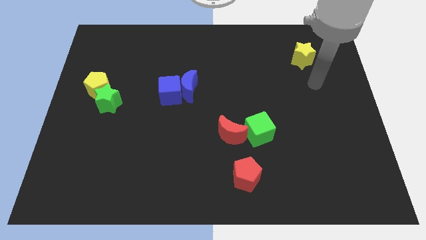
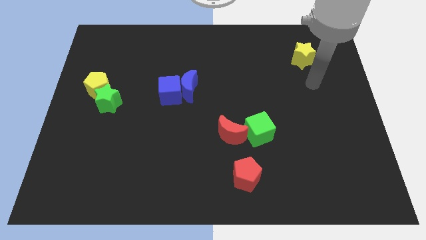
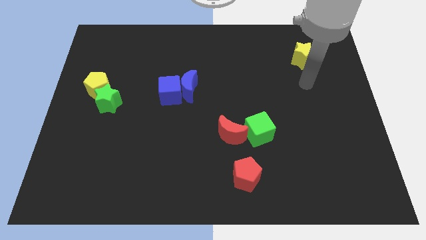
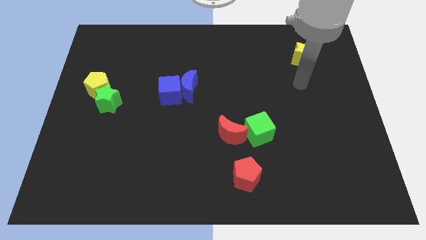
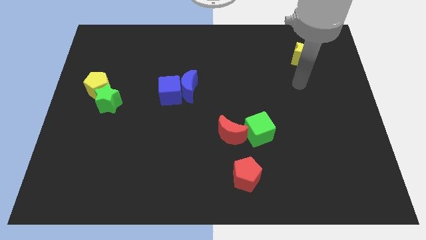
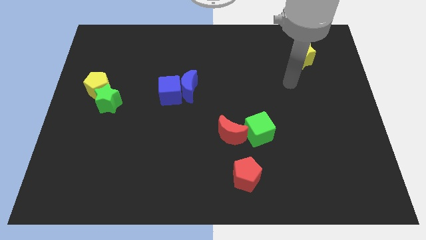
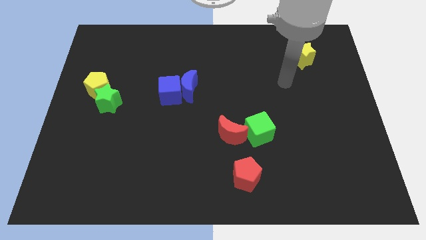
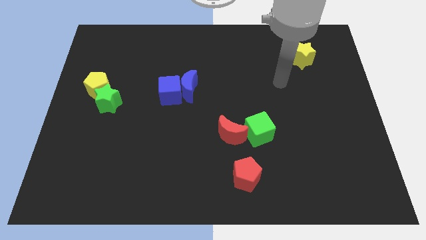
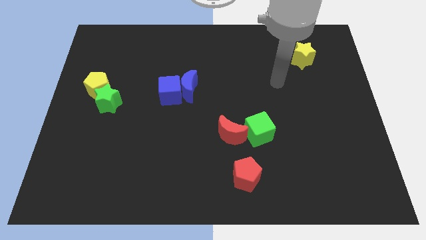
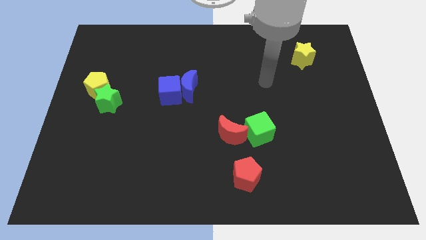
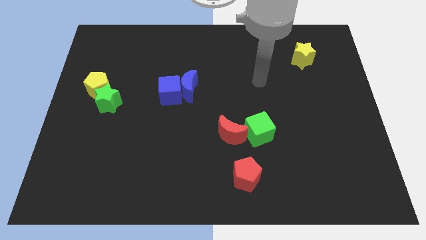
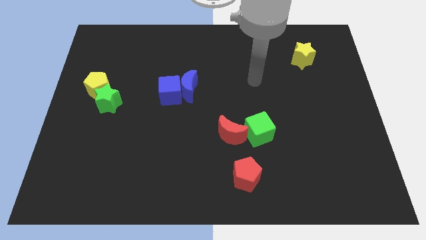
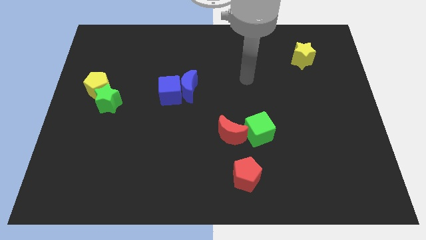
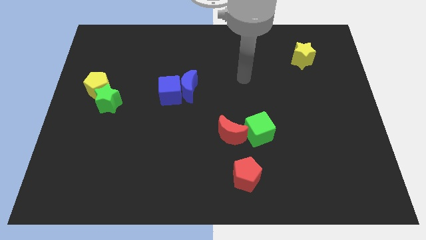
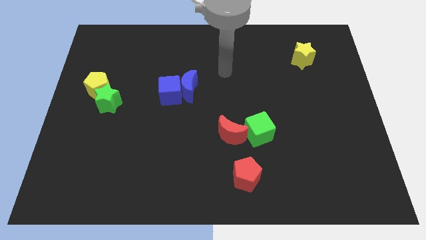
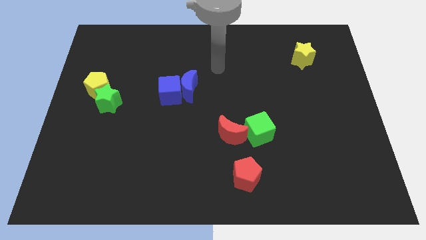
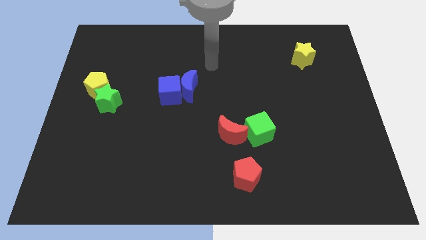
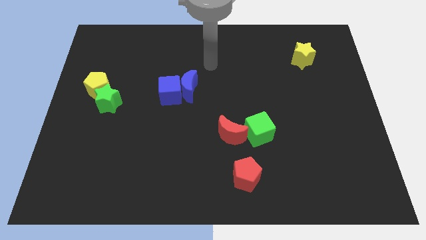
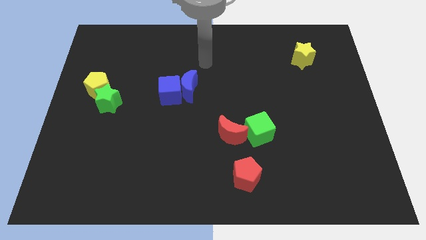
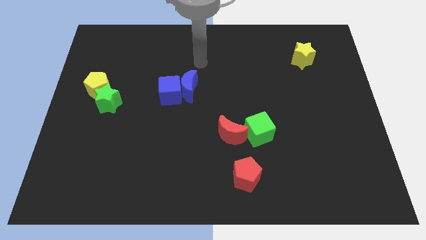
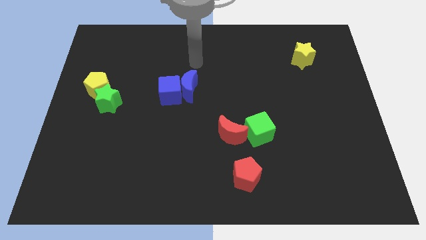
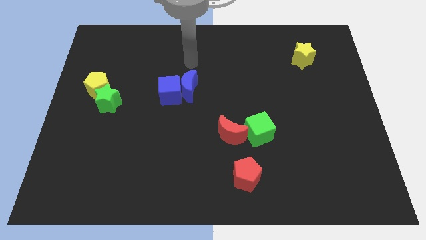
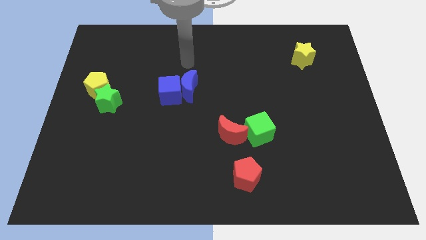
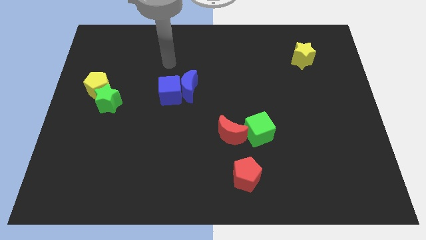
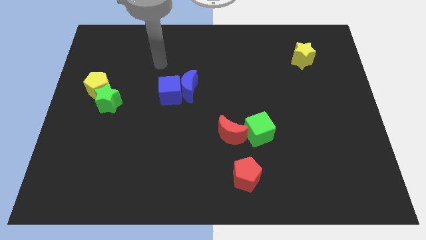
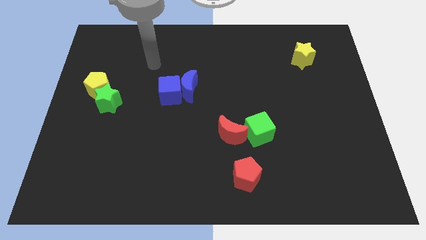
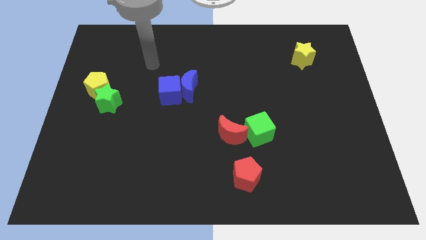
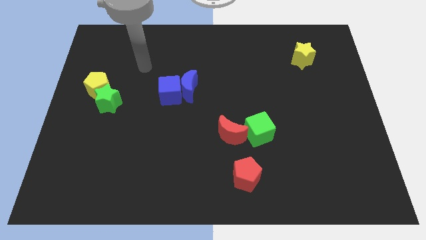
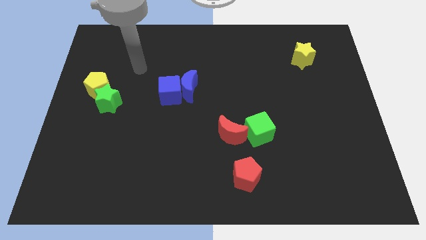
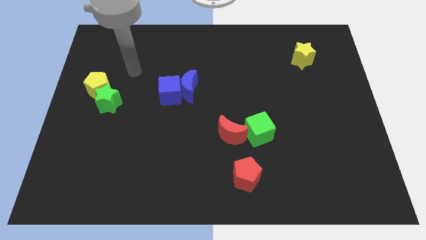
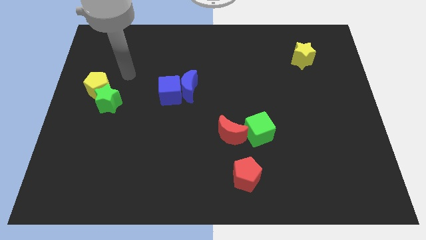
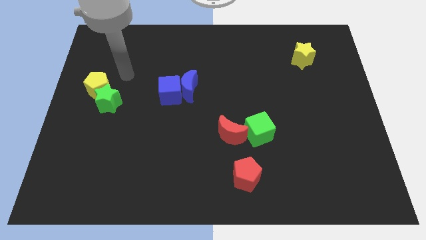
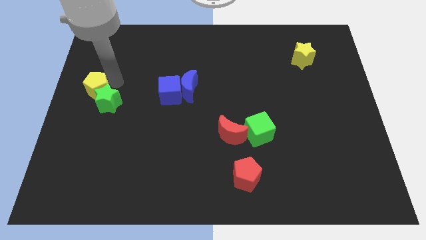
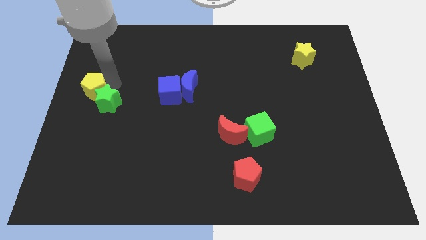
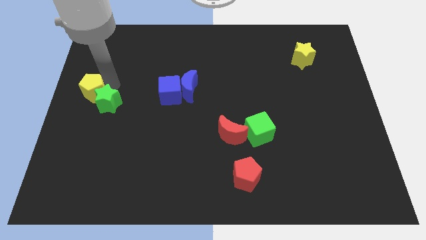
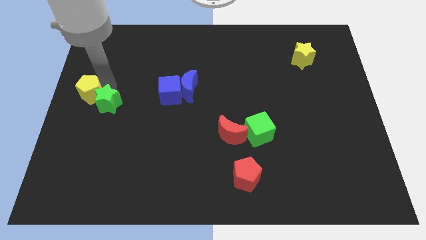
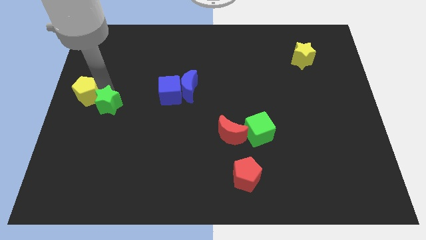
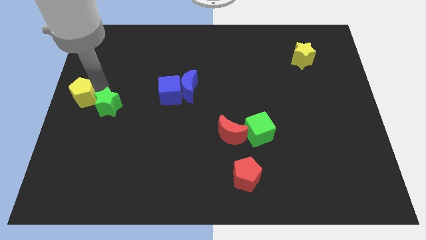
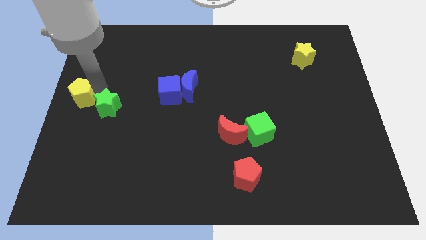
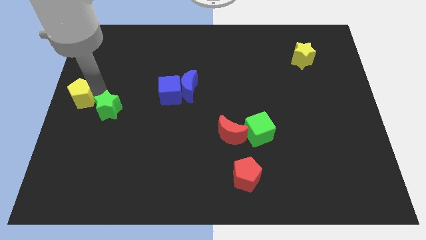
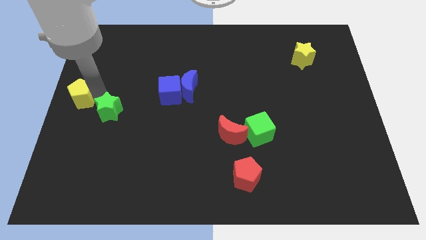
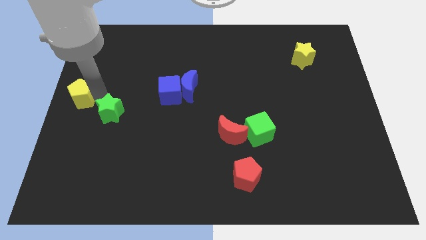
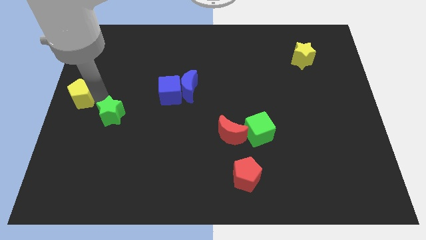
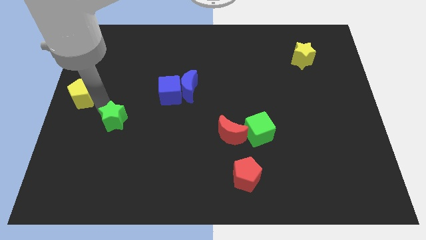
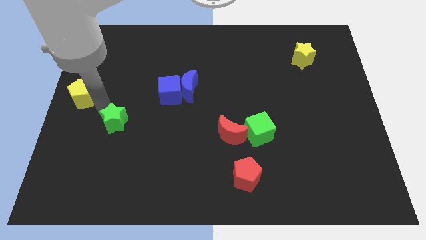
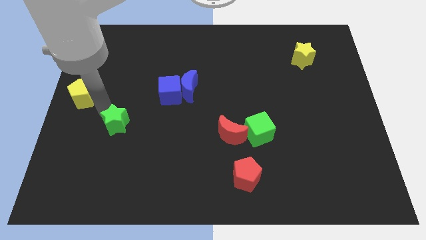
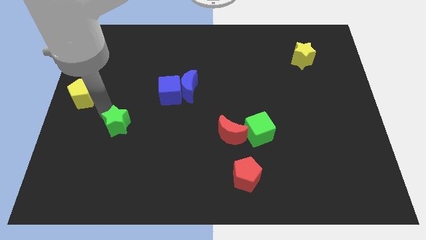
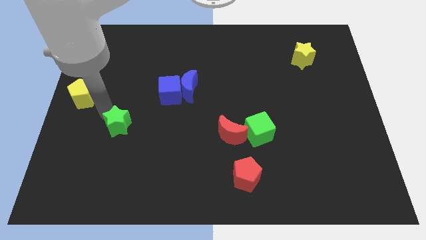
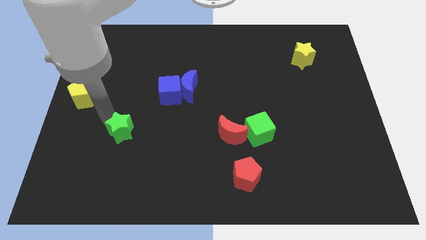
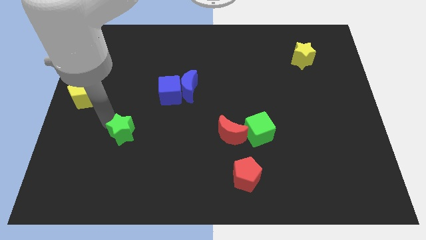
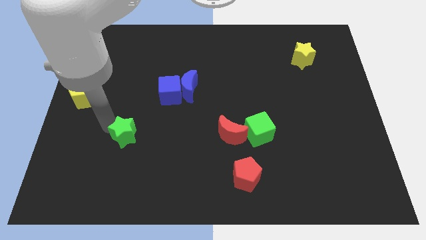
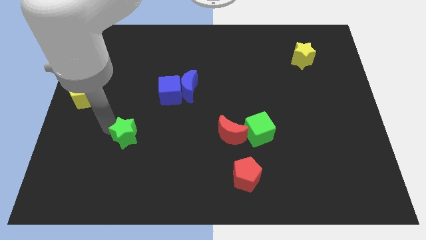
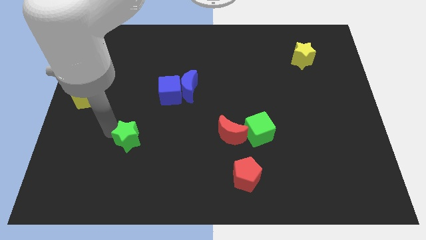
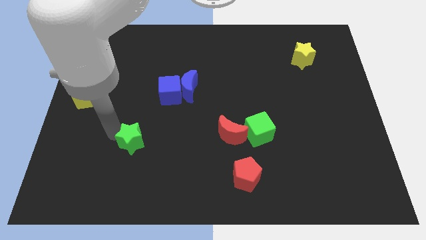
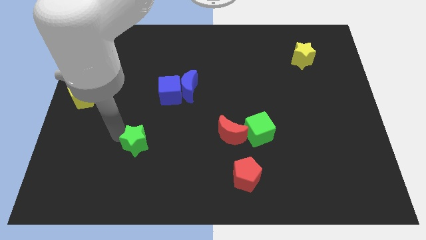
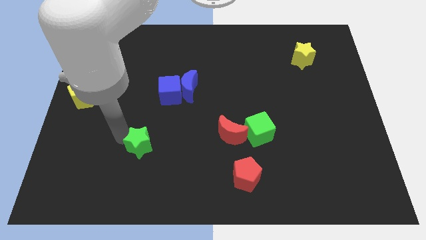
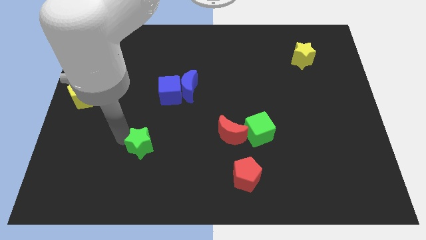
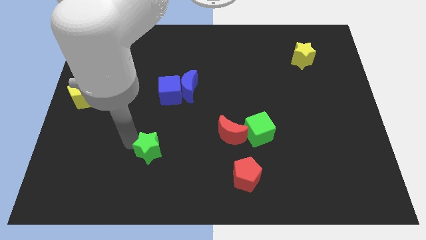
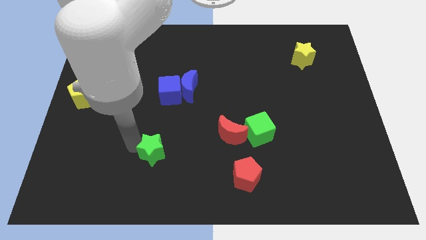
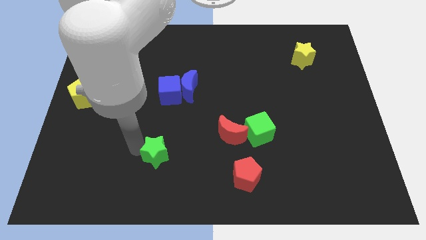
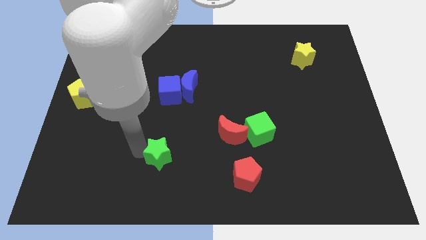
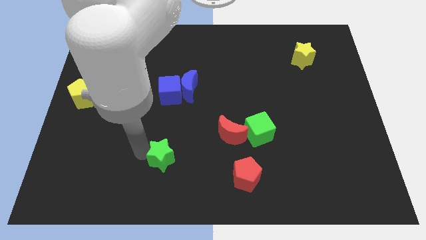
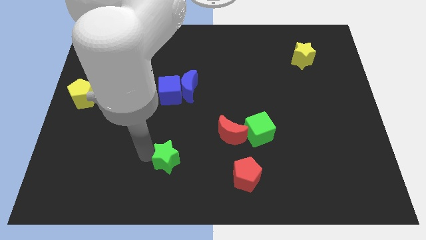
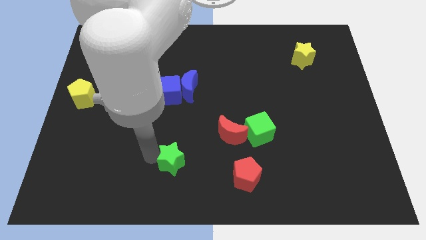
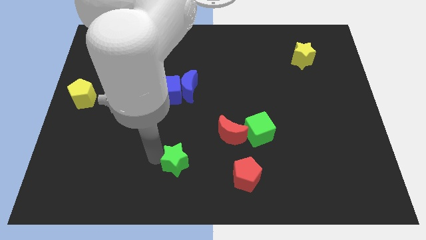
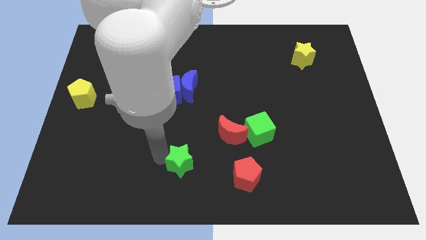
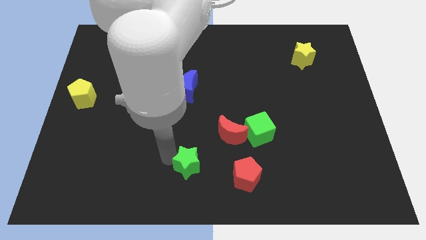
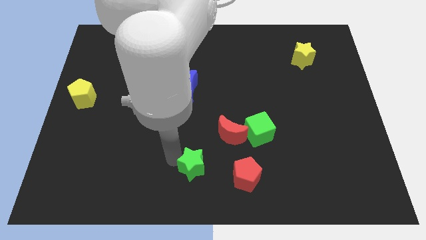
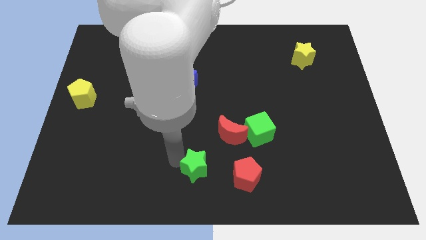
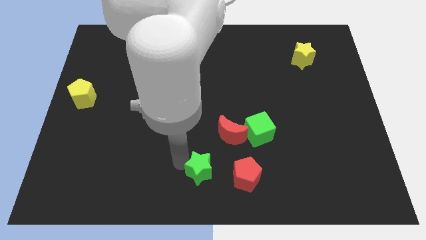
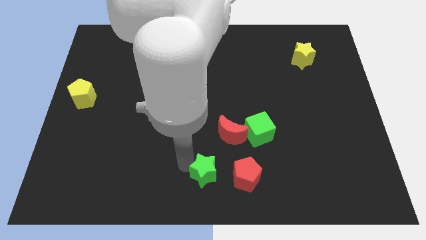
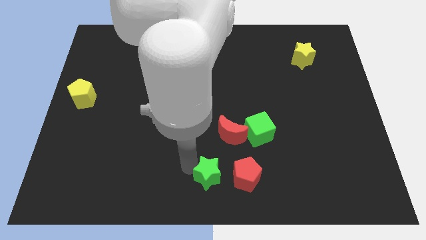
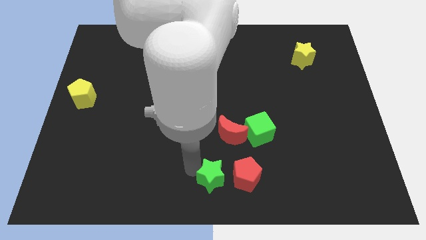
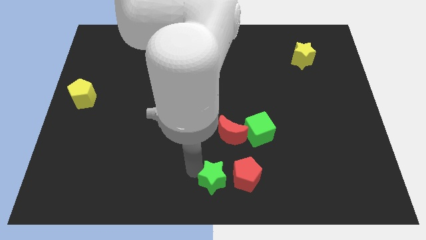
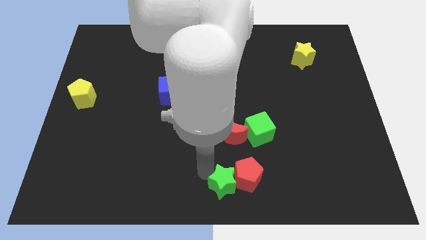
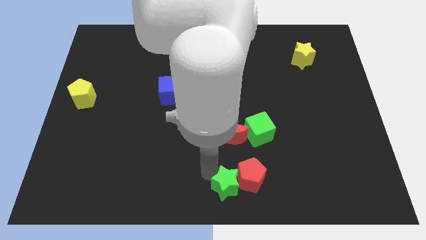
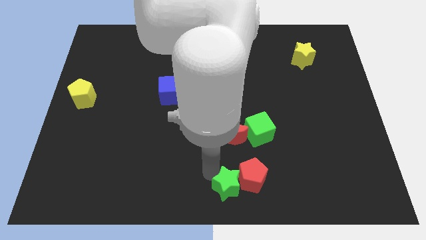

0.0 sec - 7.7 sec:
push the green star towards the red pentagon

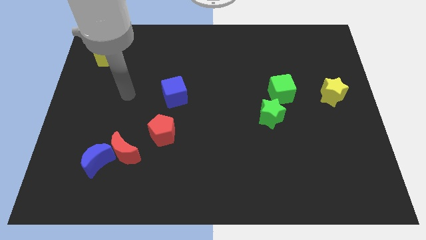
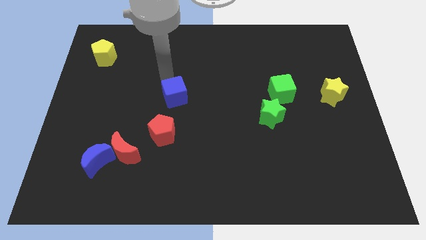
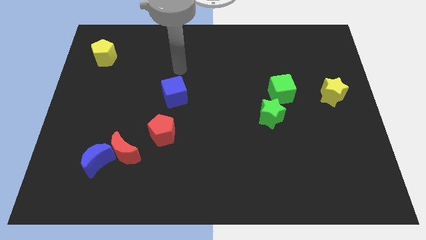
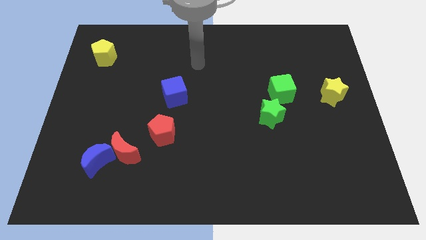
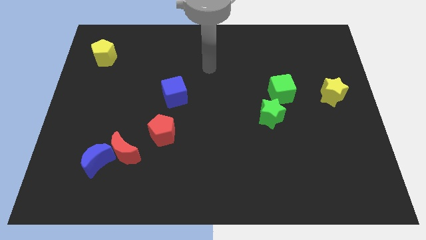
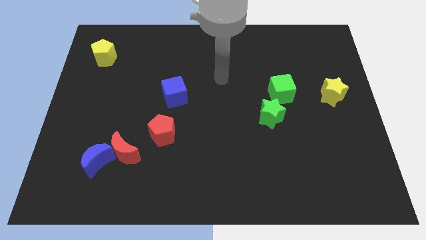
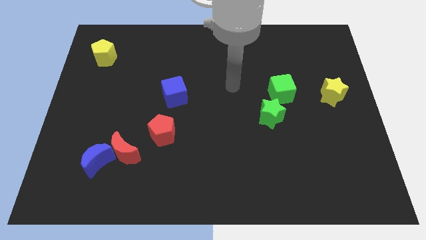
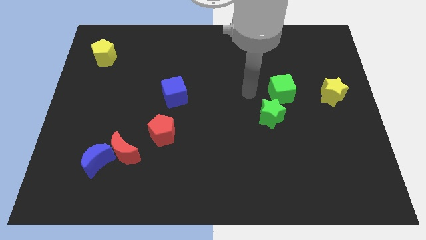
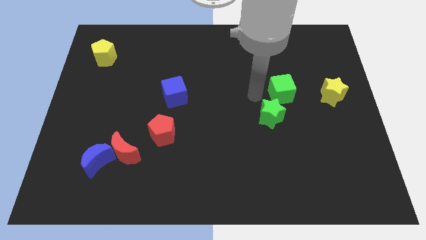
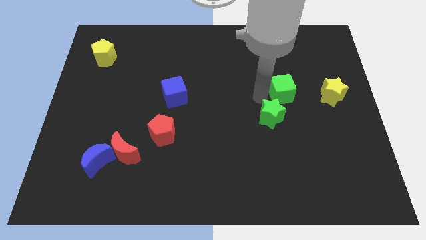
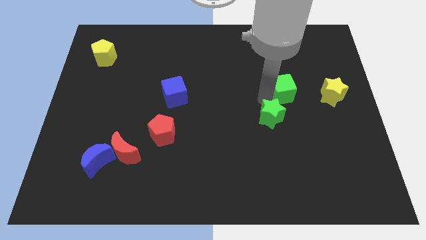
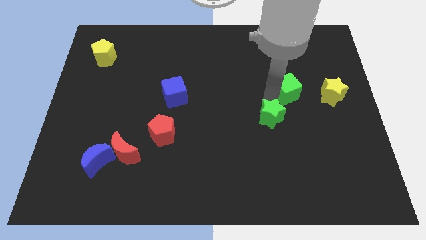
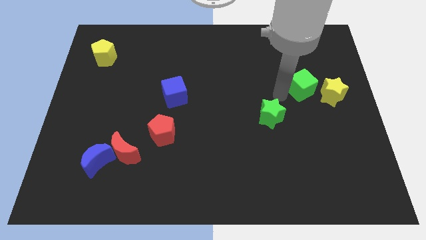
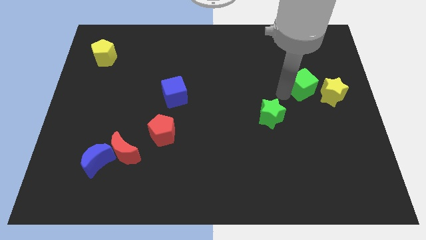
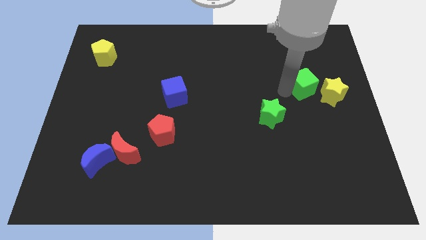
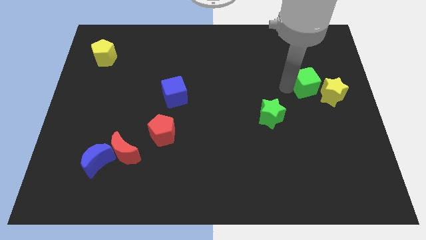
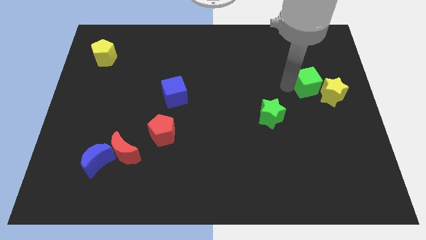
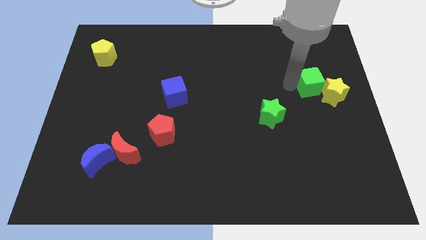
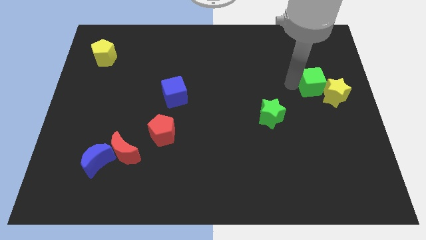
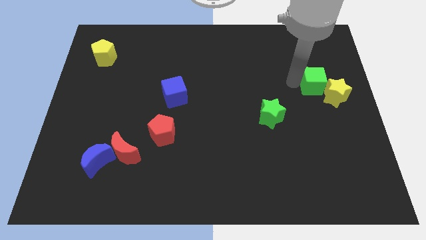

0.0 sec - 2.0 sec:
push the green cube close to the yellow star
